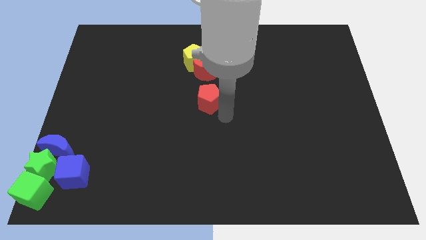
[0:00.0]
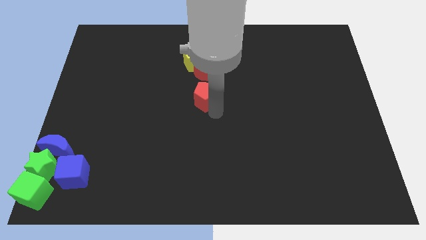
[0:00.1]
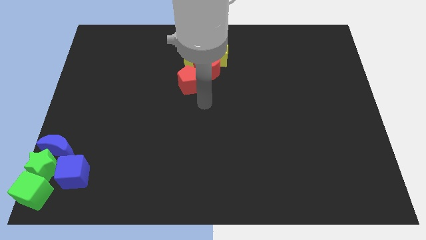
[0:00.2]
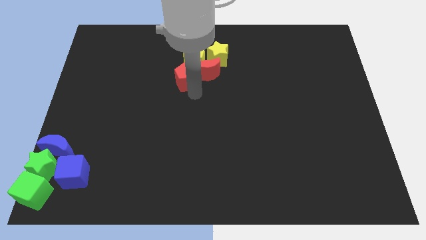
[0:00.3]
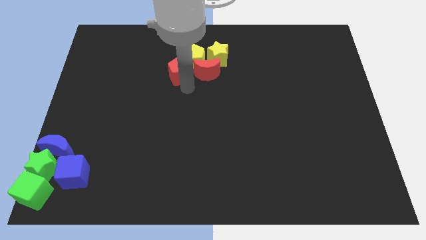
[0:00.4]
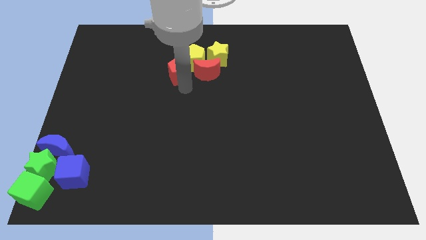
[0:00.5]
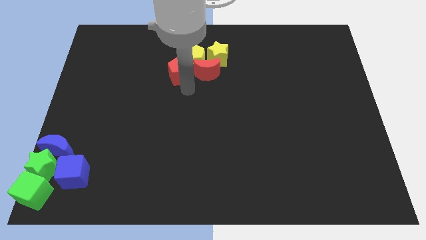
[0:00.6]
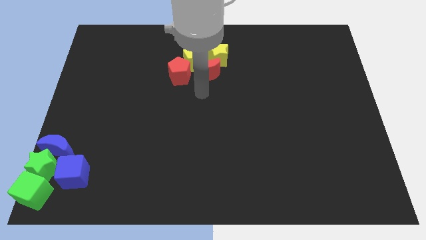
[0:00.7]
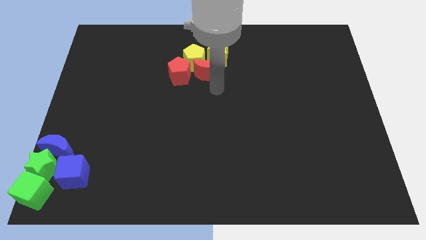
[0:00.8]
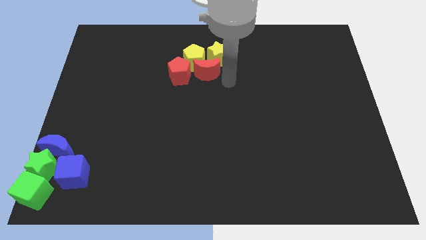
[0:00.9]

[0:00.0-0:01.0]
move the red pentagon to the left of the red crescent

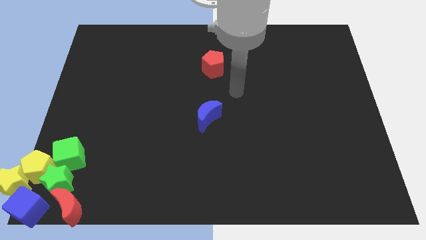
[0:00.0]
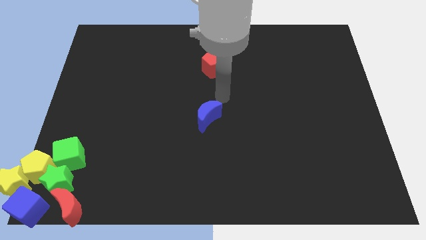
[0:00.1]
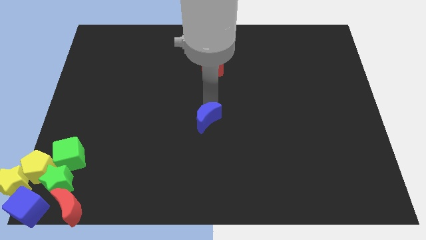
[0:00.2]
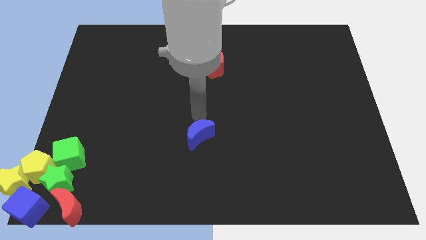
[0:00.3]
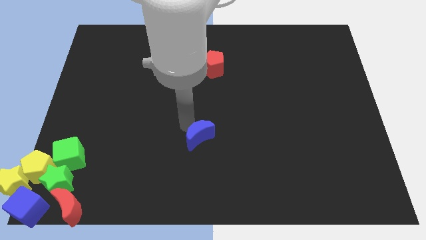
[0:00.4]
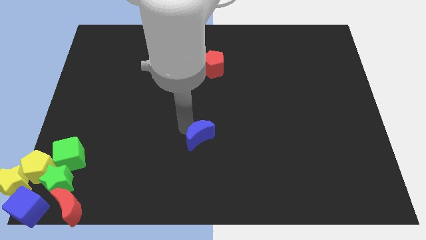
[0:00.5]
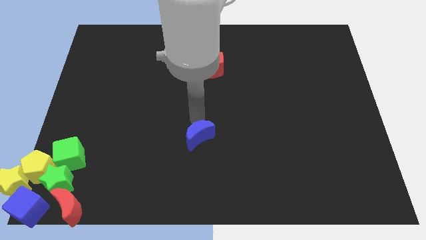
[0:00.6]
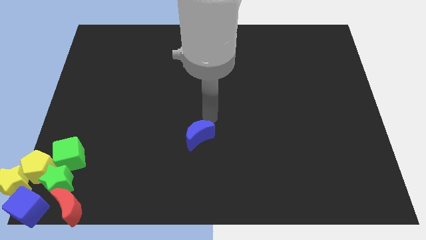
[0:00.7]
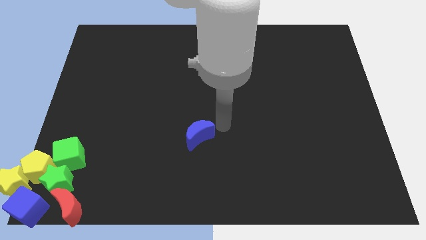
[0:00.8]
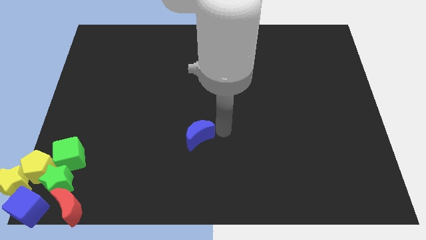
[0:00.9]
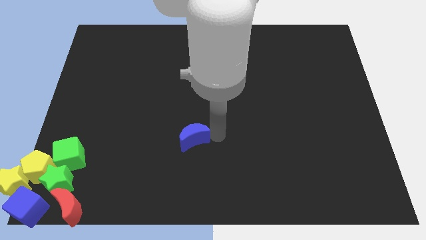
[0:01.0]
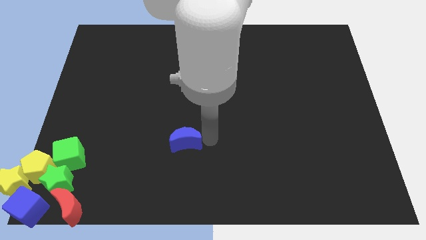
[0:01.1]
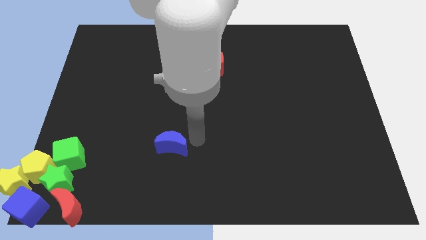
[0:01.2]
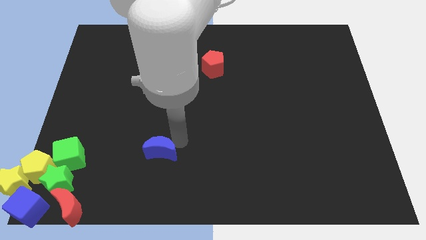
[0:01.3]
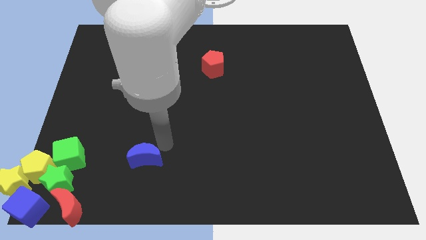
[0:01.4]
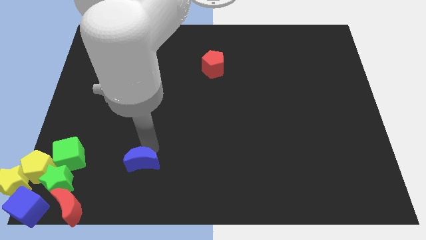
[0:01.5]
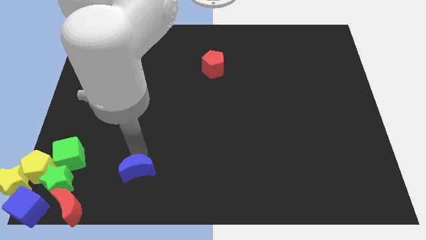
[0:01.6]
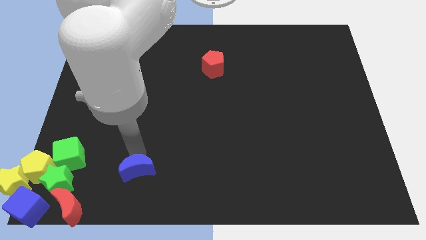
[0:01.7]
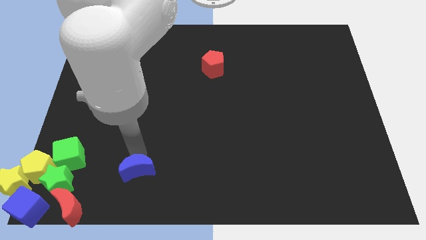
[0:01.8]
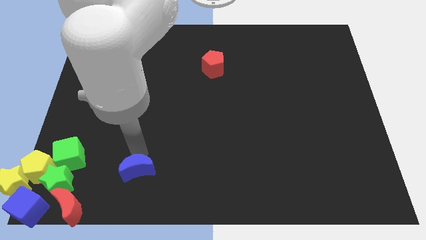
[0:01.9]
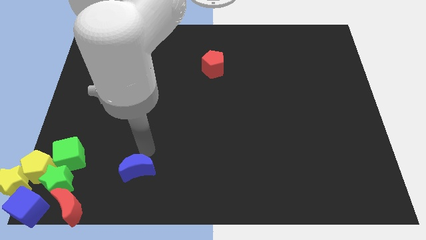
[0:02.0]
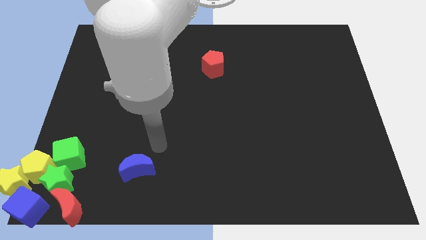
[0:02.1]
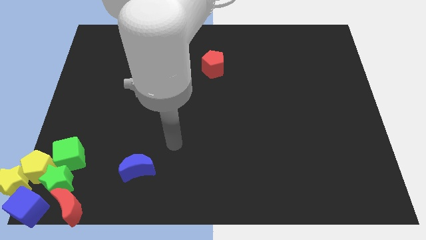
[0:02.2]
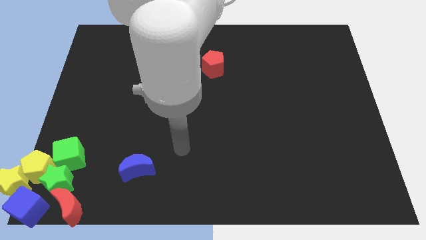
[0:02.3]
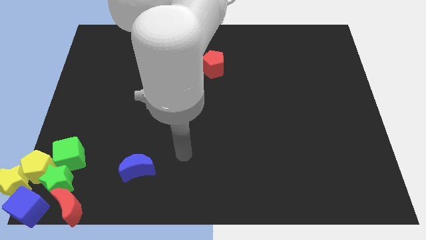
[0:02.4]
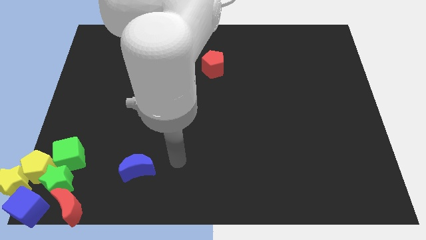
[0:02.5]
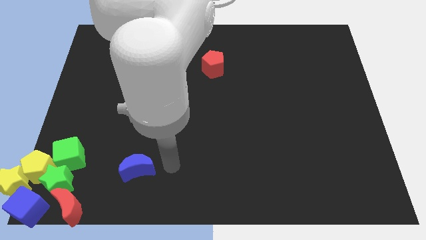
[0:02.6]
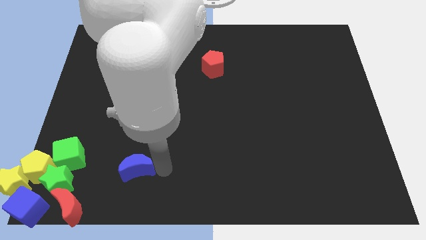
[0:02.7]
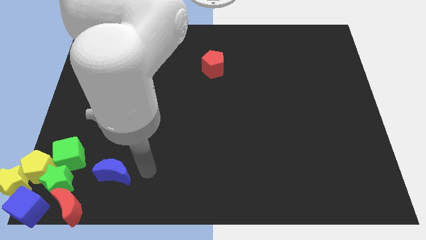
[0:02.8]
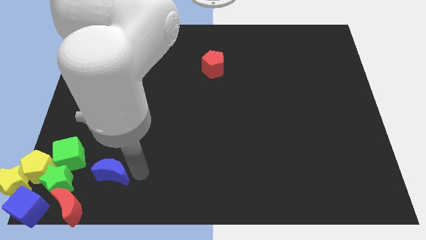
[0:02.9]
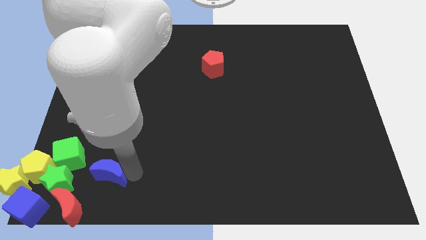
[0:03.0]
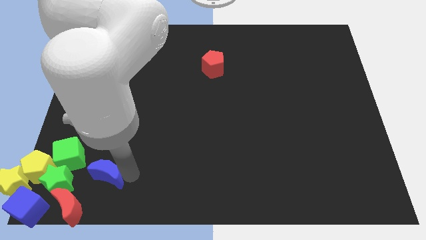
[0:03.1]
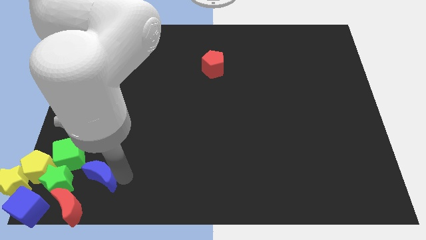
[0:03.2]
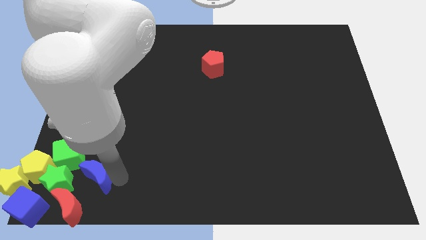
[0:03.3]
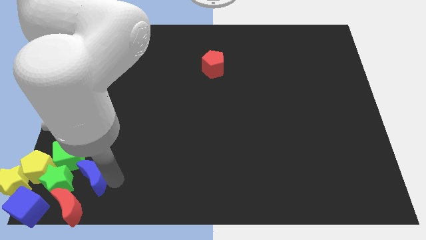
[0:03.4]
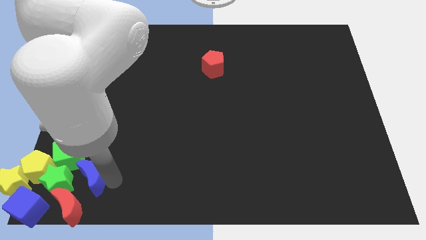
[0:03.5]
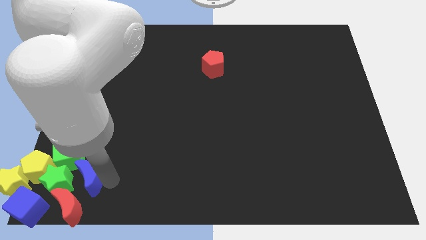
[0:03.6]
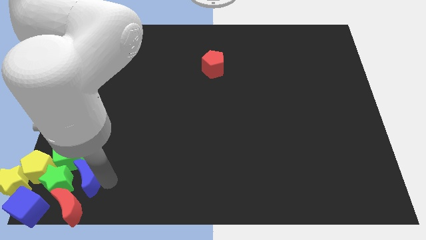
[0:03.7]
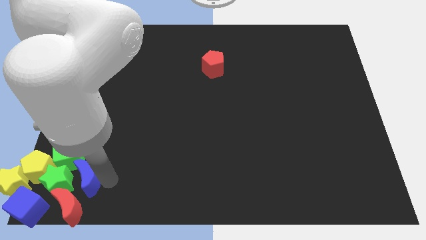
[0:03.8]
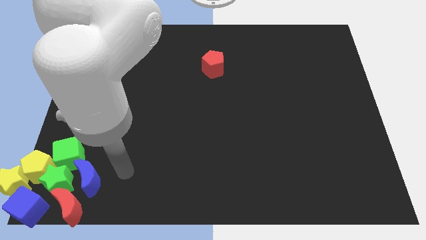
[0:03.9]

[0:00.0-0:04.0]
move the blue moon close to the right side of the green star

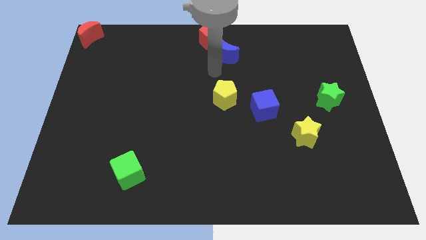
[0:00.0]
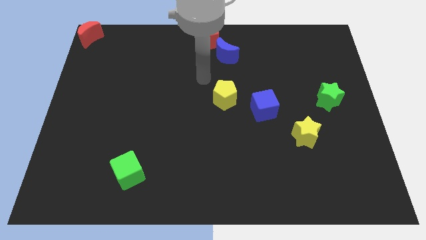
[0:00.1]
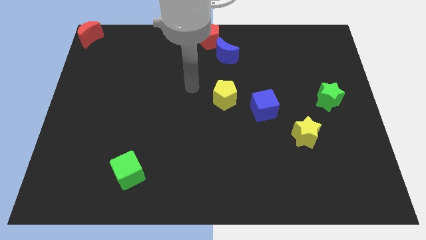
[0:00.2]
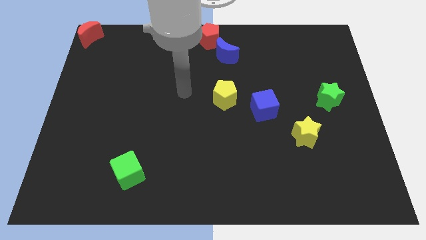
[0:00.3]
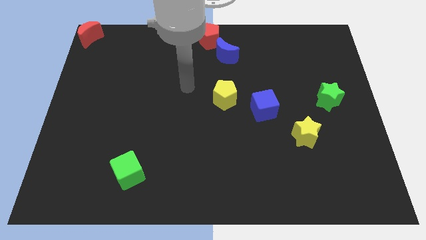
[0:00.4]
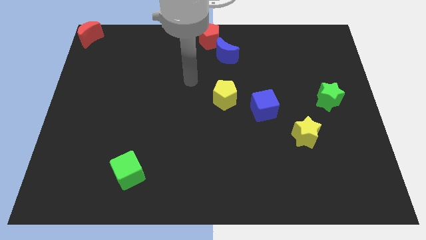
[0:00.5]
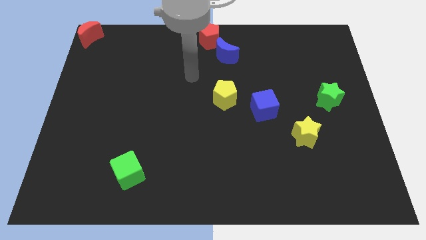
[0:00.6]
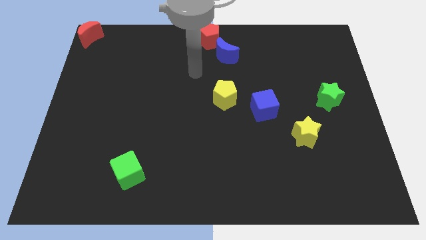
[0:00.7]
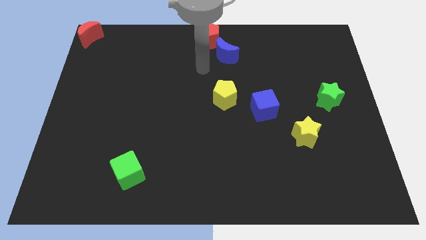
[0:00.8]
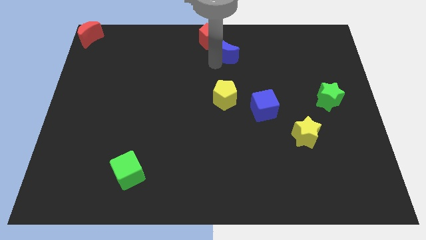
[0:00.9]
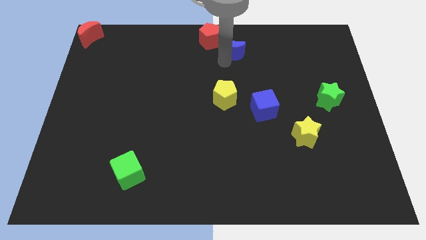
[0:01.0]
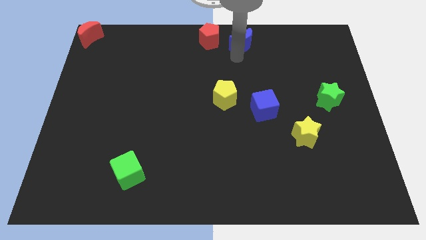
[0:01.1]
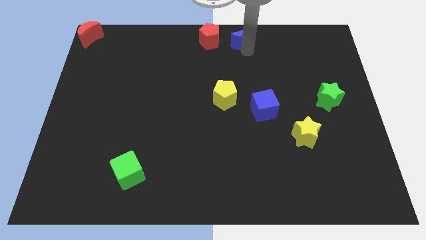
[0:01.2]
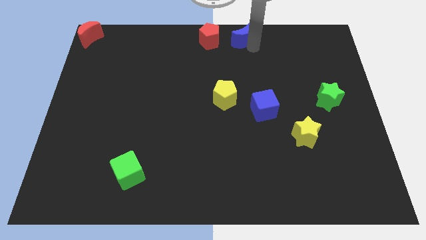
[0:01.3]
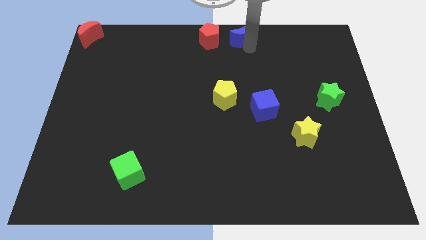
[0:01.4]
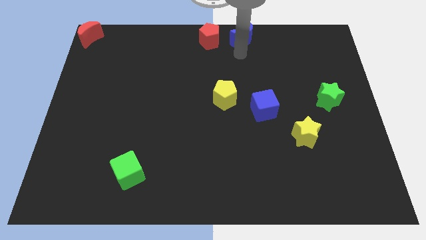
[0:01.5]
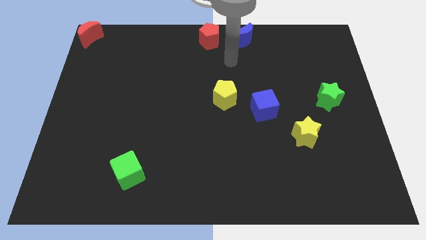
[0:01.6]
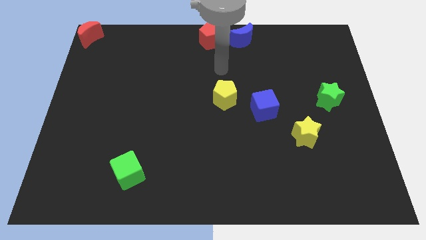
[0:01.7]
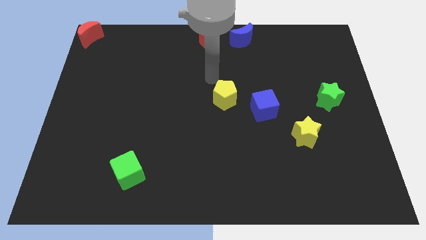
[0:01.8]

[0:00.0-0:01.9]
place the blue moon right to the red pentagon

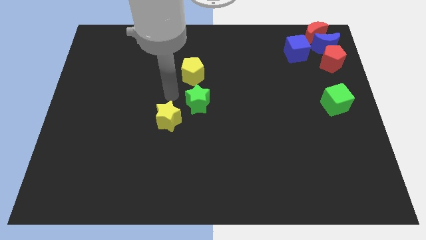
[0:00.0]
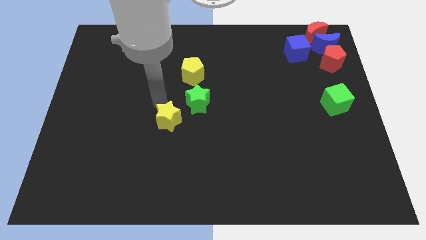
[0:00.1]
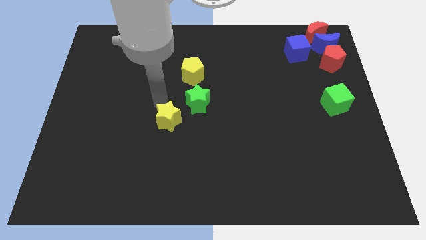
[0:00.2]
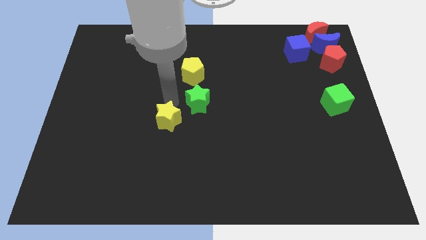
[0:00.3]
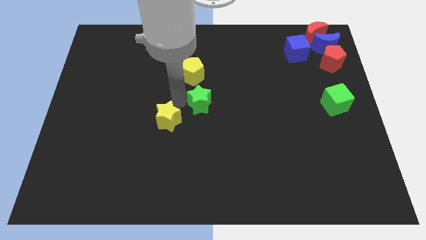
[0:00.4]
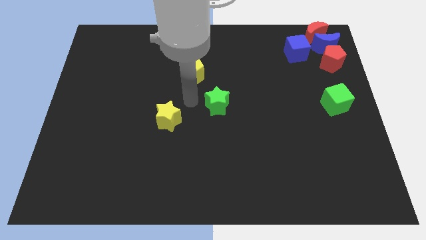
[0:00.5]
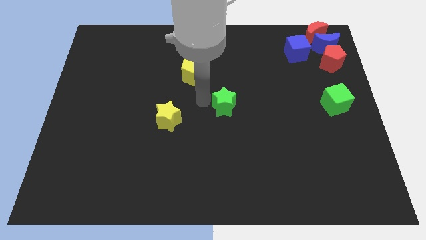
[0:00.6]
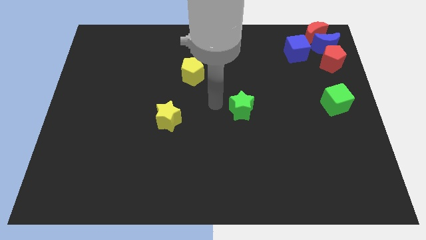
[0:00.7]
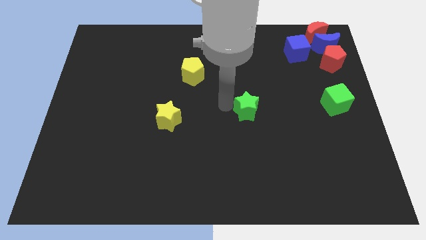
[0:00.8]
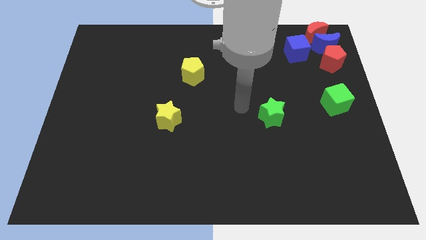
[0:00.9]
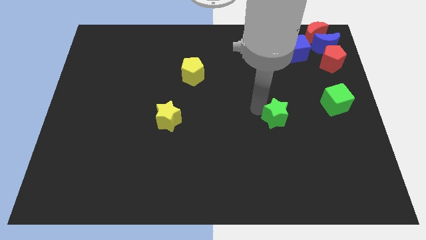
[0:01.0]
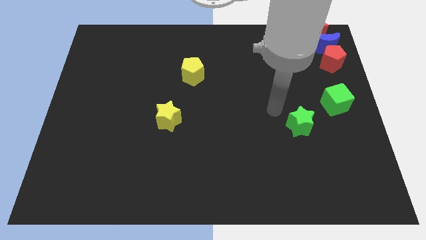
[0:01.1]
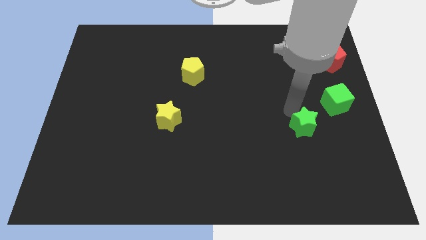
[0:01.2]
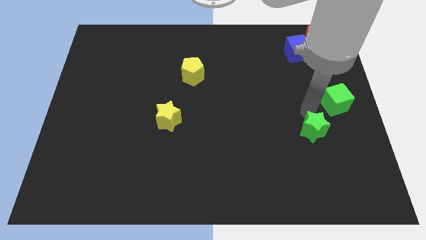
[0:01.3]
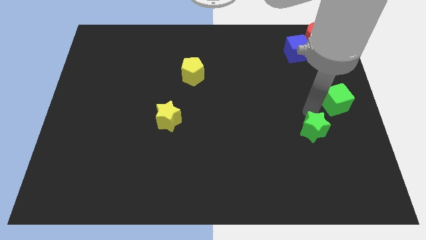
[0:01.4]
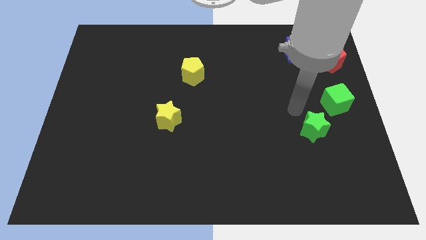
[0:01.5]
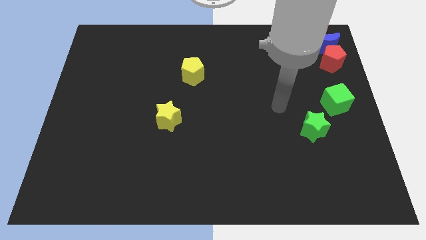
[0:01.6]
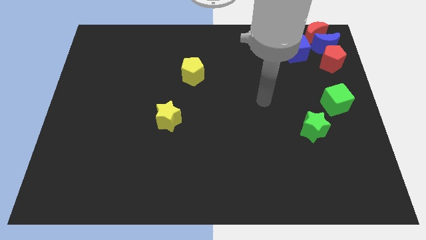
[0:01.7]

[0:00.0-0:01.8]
place the green star at the bottom left side of the green cube

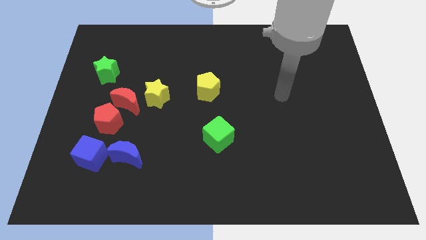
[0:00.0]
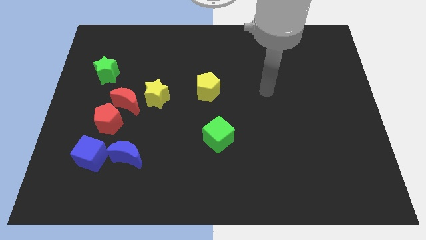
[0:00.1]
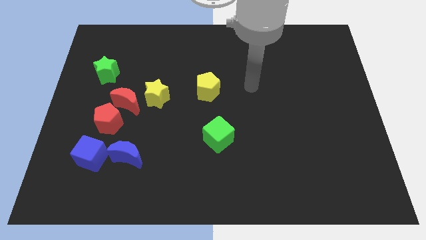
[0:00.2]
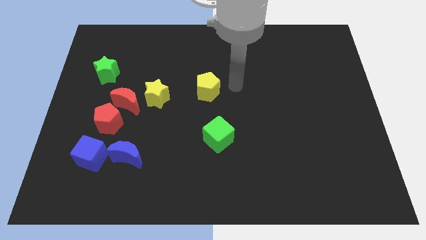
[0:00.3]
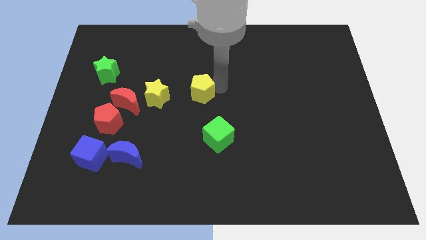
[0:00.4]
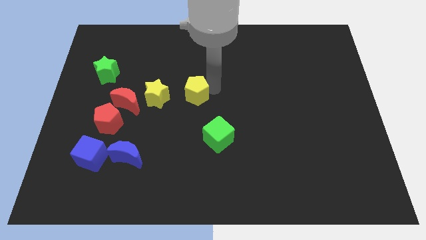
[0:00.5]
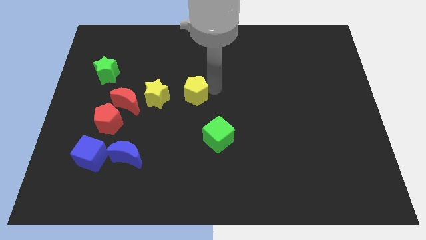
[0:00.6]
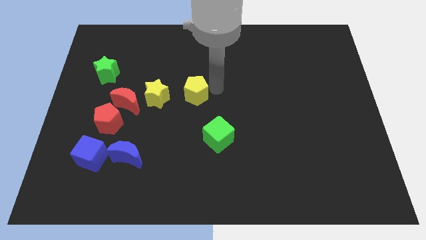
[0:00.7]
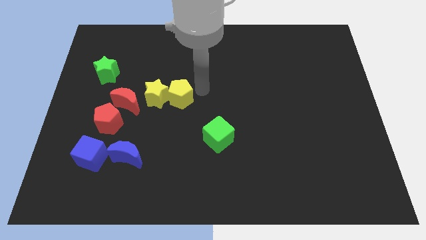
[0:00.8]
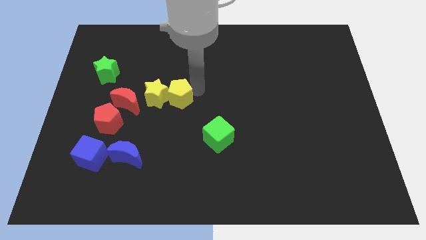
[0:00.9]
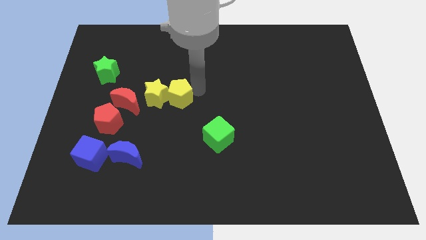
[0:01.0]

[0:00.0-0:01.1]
push the yellow pentagon into the right side of the yellow star
